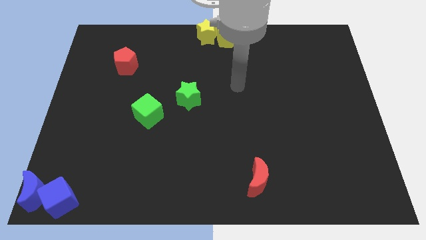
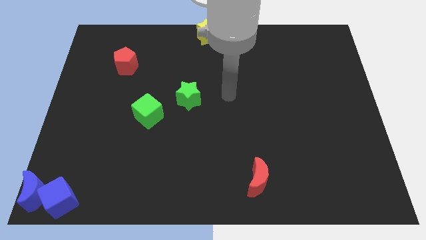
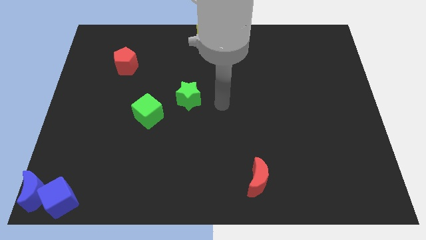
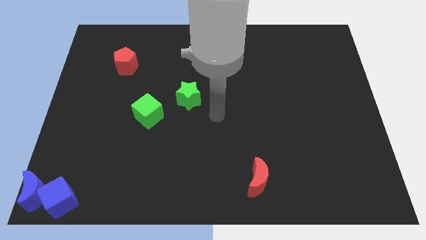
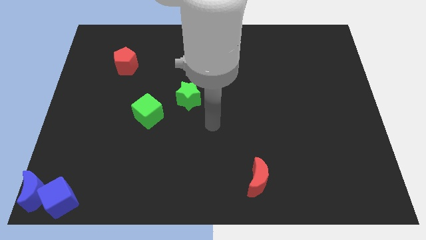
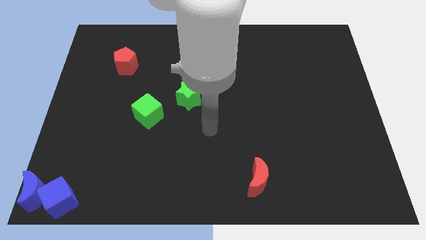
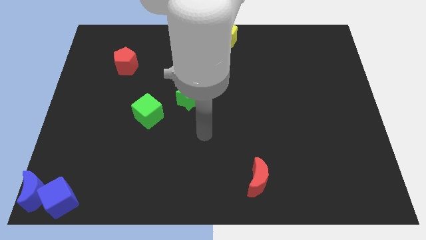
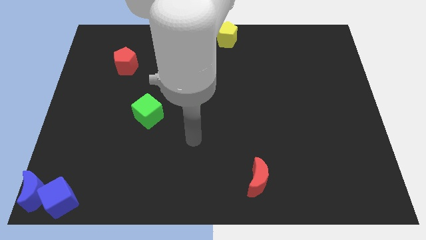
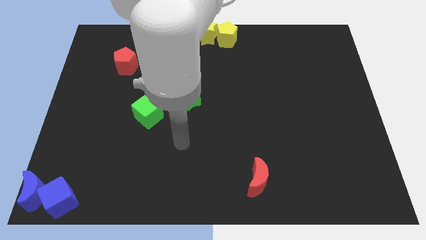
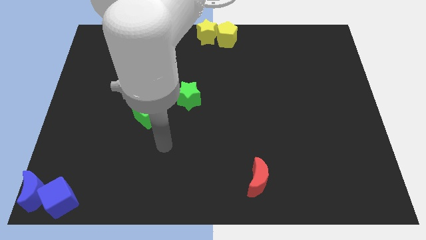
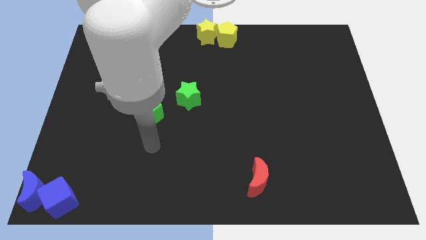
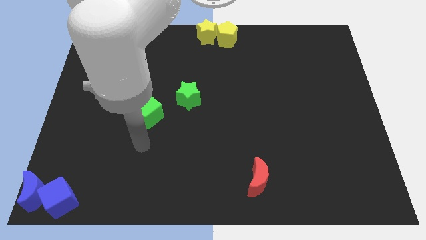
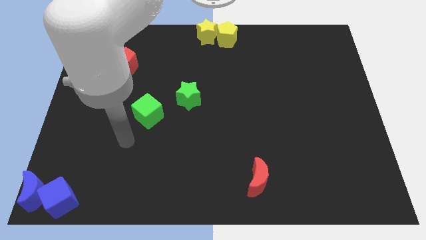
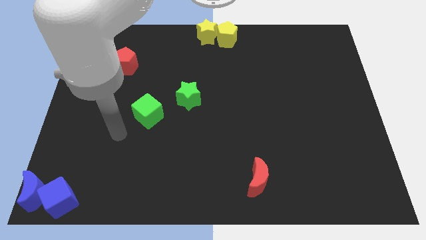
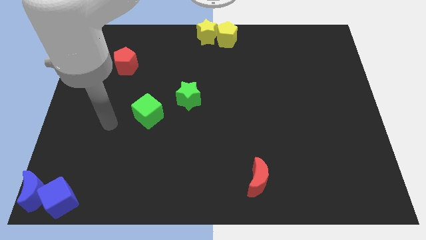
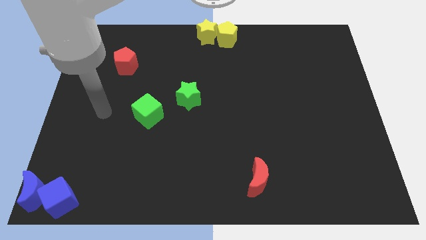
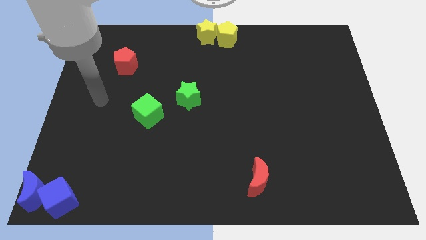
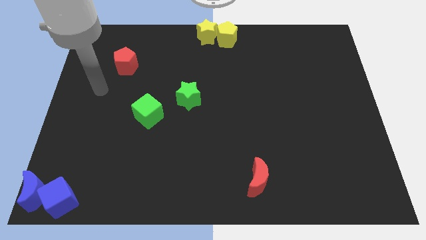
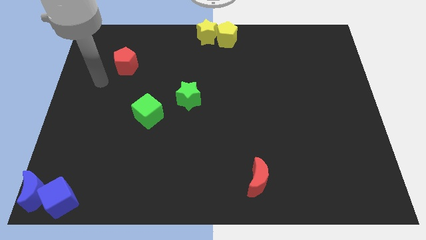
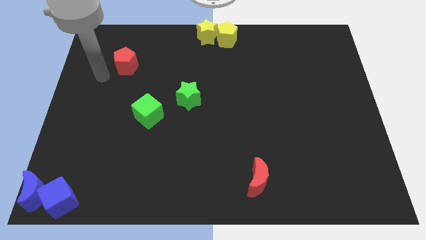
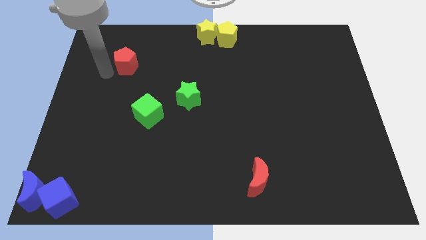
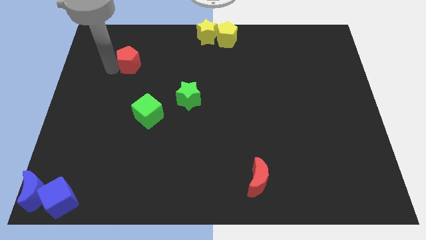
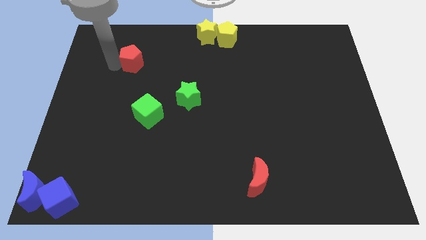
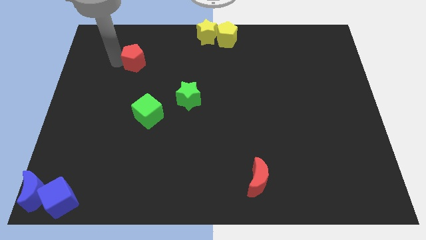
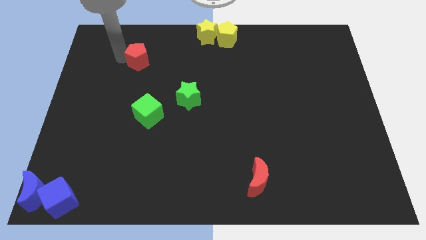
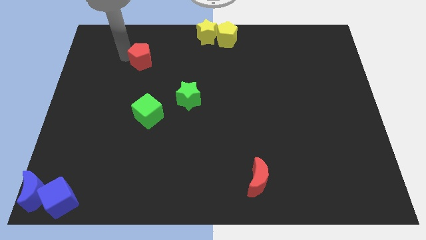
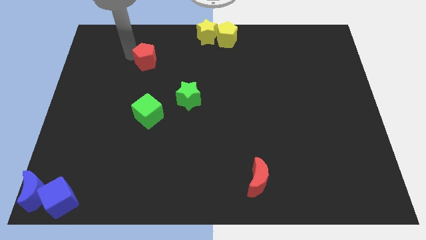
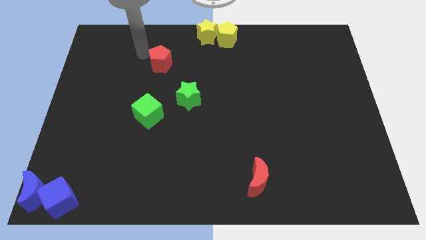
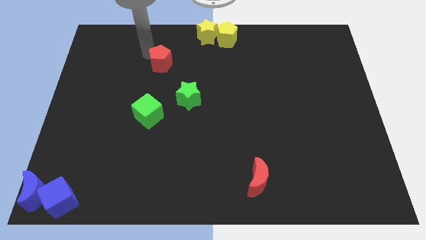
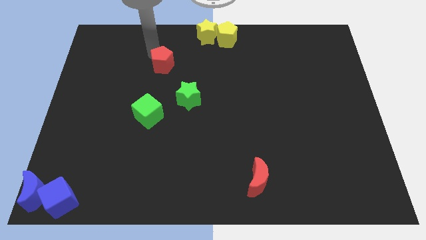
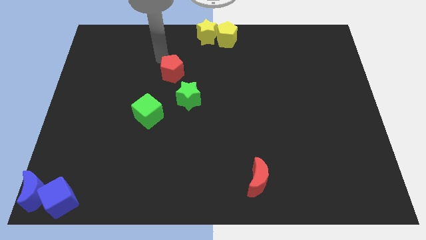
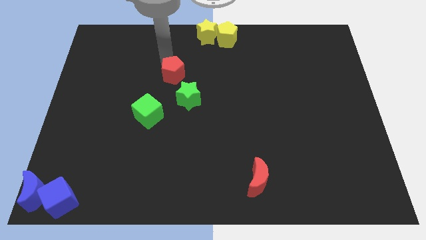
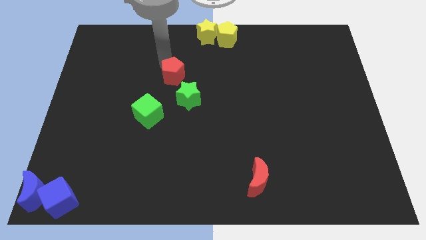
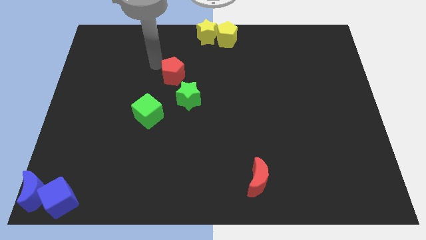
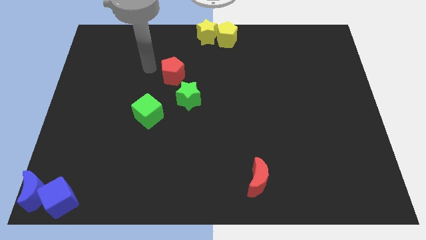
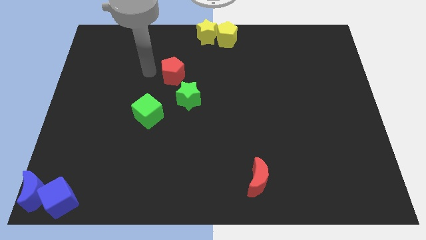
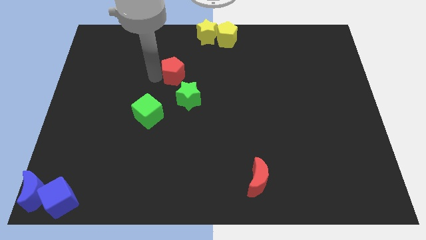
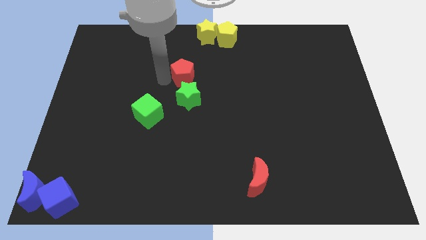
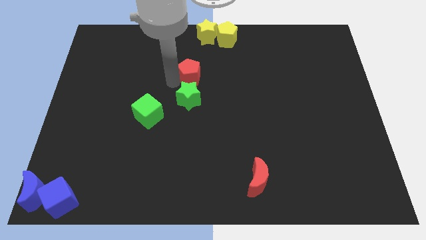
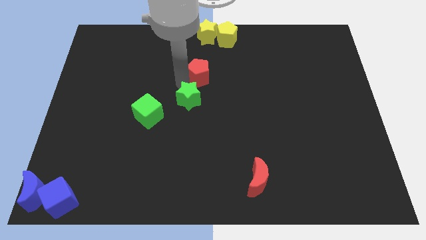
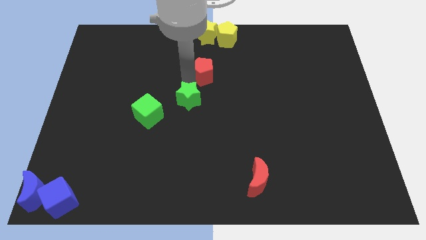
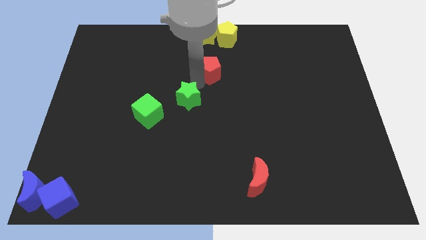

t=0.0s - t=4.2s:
move the red pentagon above to the green star

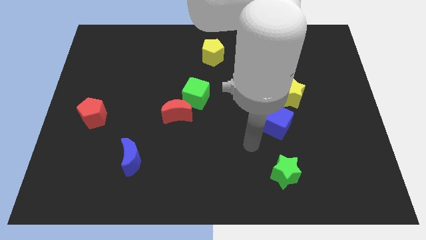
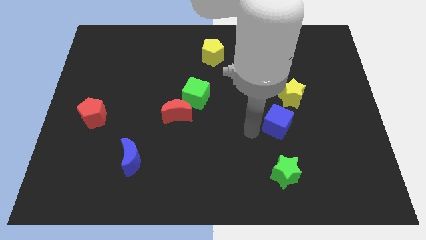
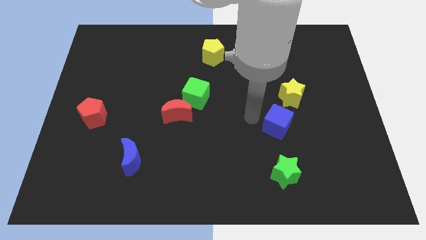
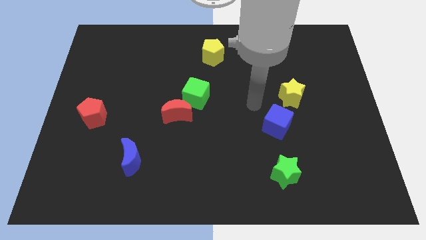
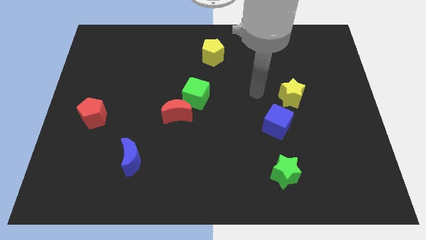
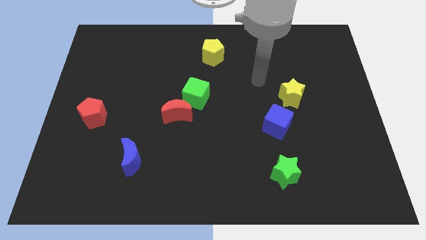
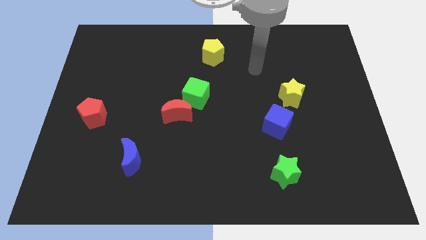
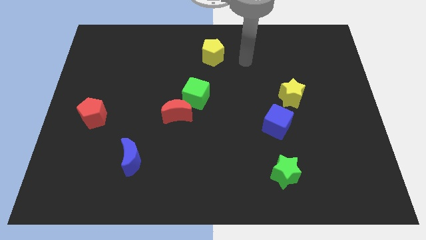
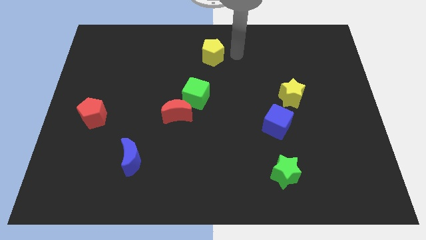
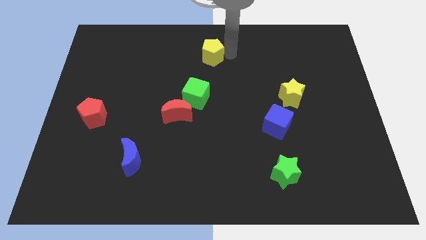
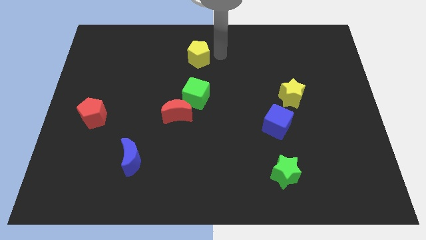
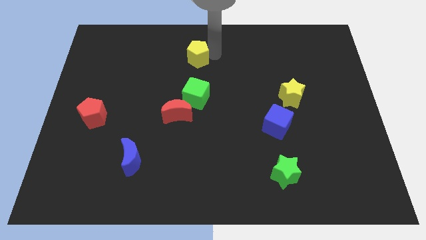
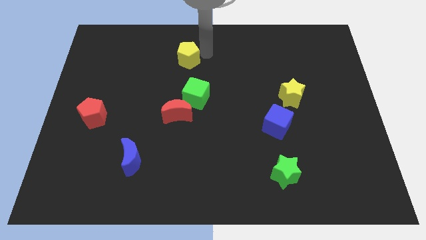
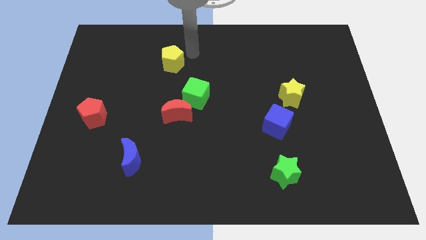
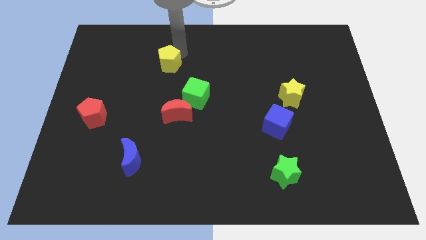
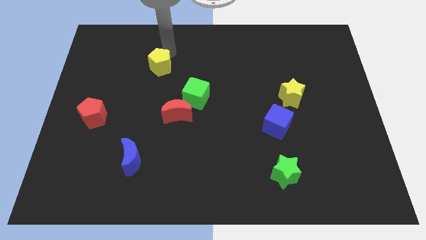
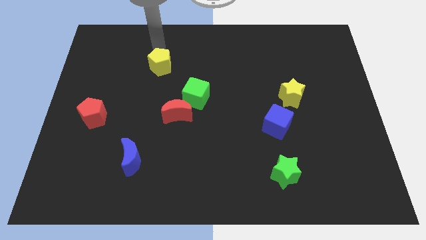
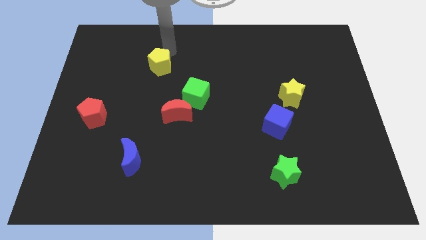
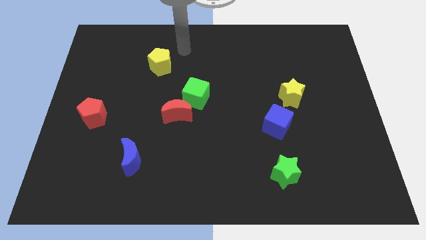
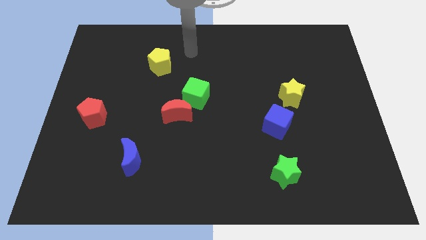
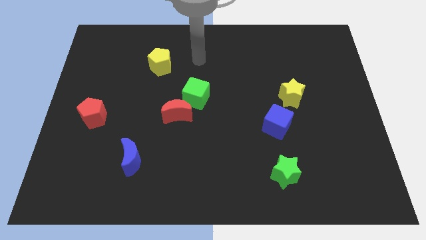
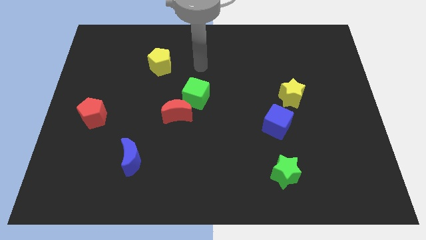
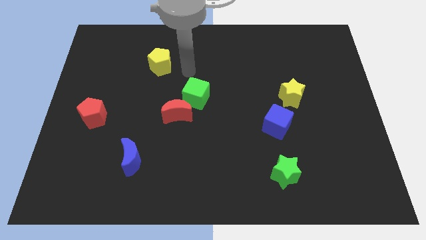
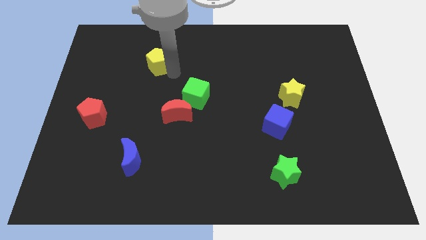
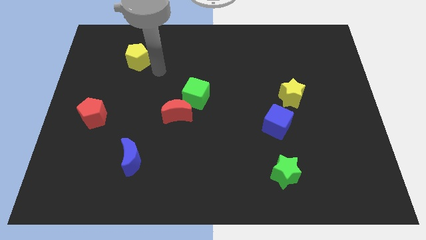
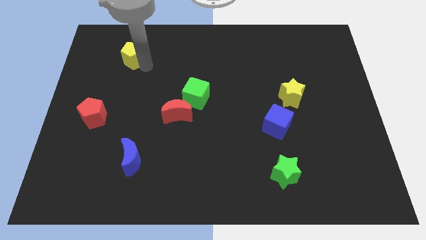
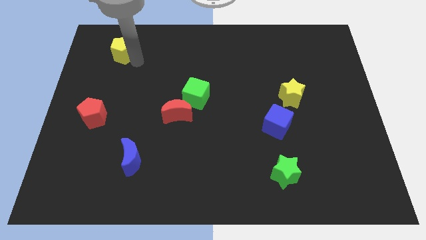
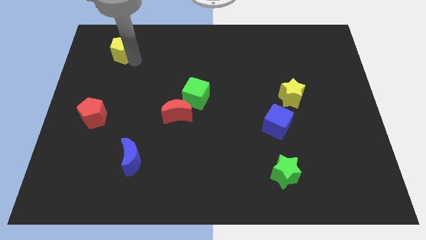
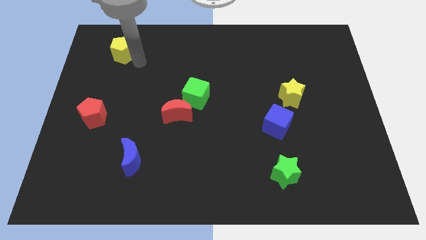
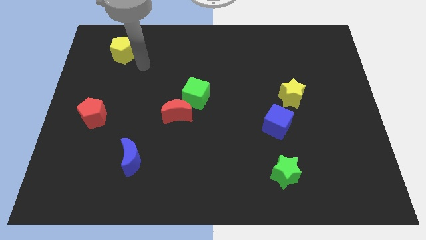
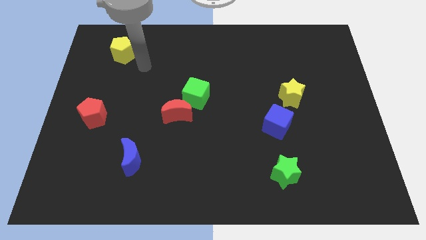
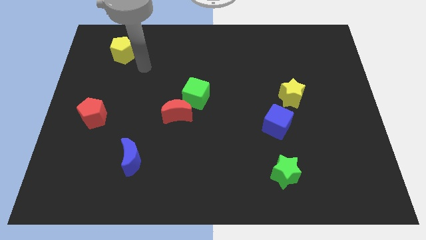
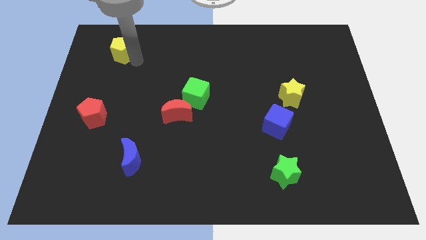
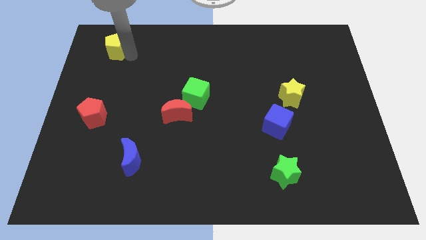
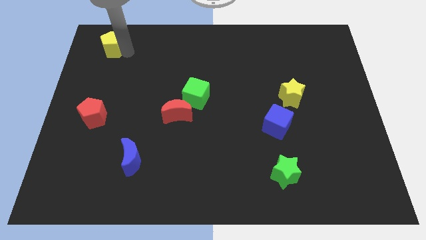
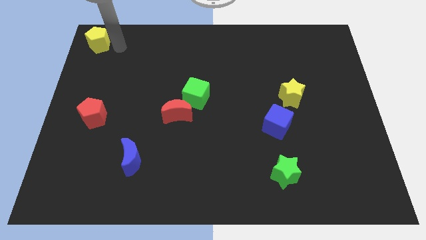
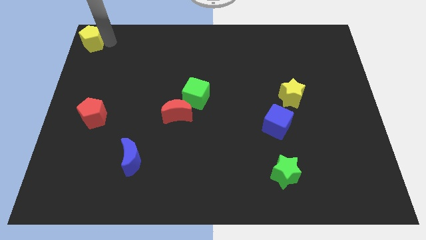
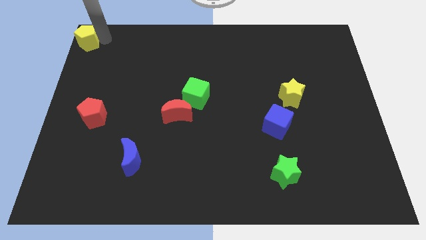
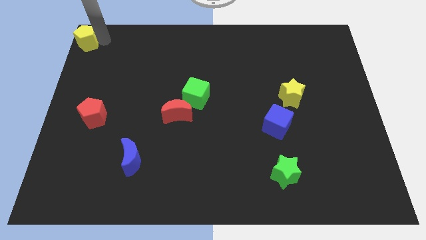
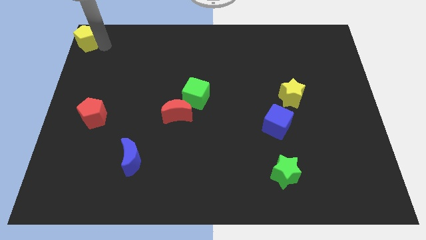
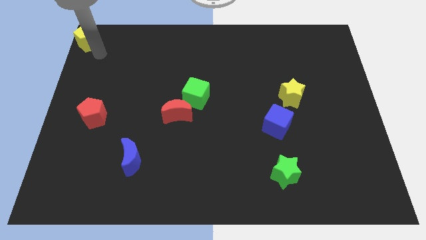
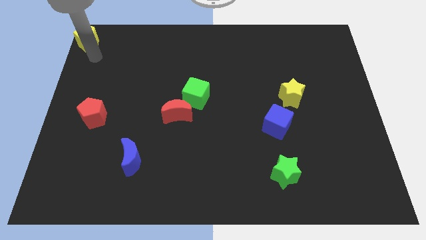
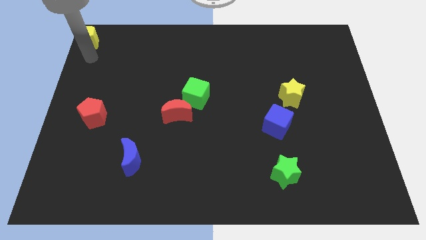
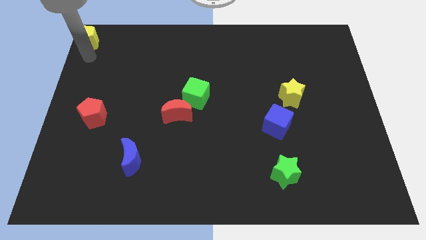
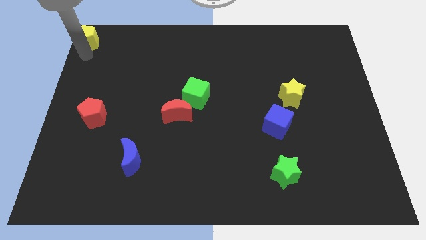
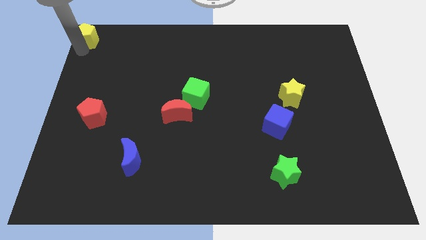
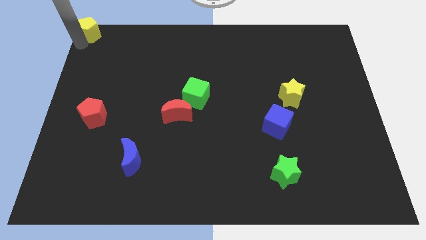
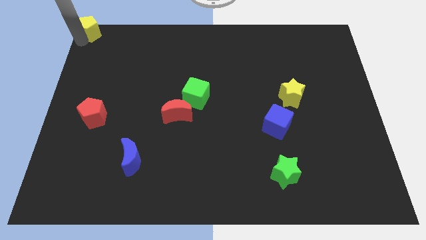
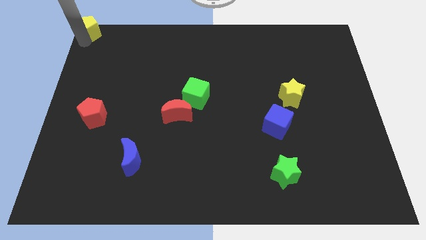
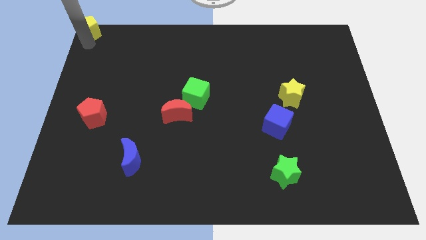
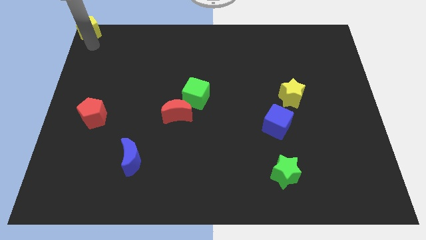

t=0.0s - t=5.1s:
move the yellow pentagon top left corner of the board
